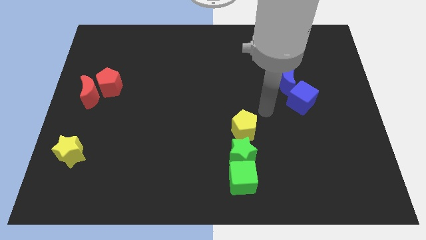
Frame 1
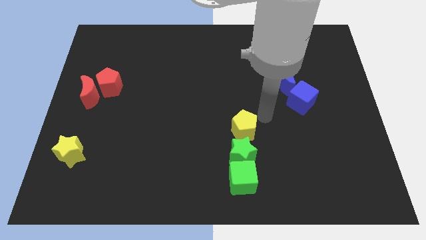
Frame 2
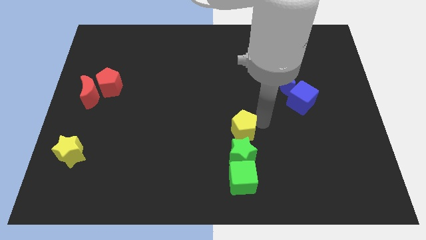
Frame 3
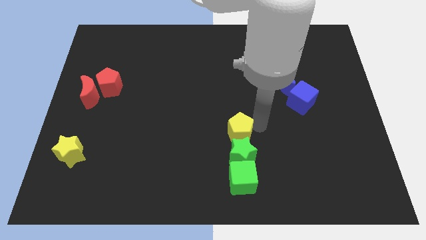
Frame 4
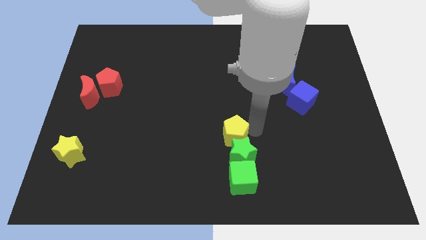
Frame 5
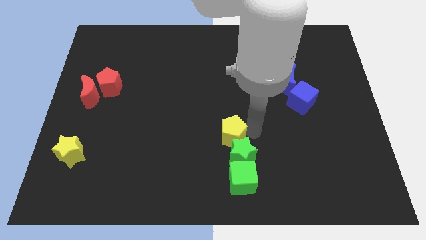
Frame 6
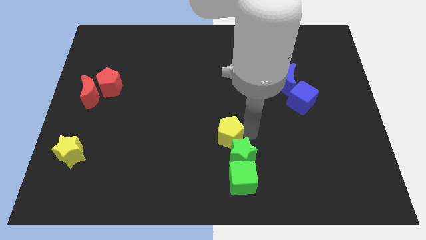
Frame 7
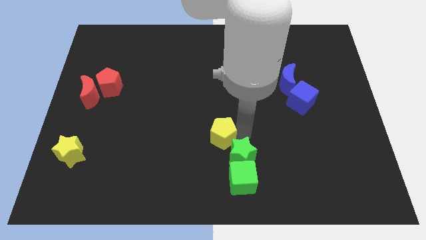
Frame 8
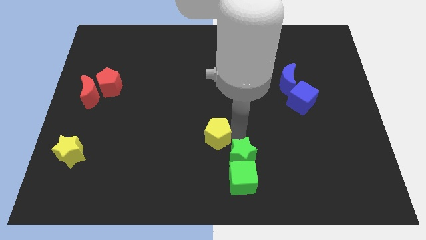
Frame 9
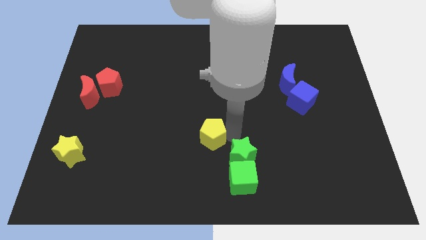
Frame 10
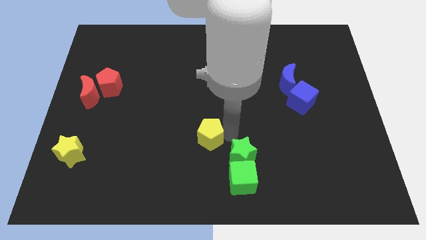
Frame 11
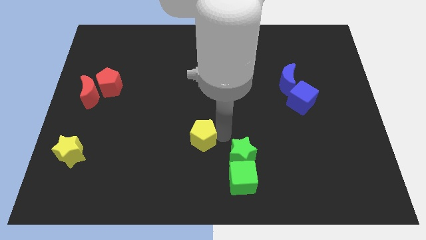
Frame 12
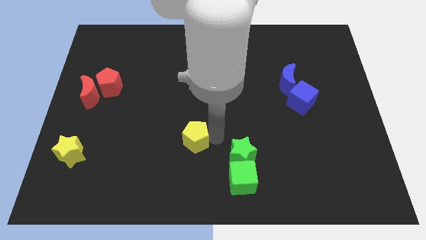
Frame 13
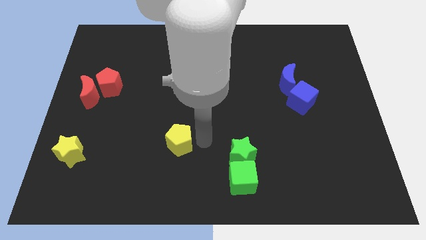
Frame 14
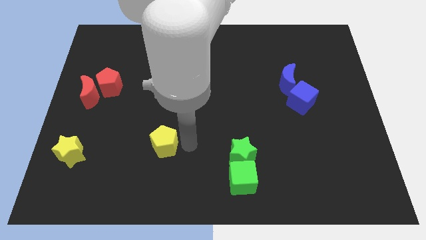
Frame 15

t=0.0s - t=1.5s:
separate the yellow pentagon from the vertical line of blocks

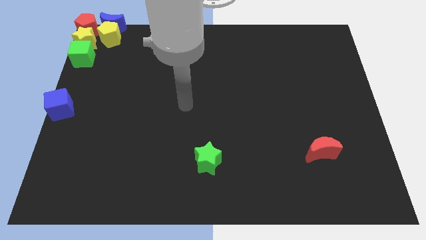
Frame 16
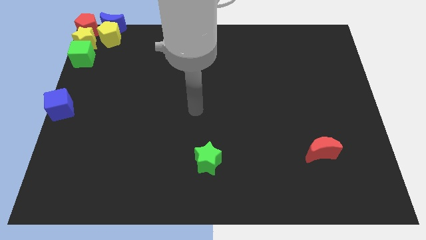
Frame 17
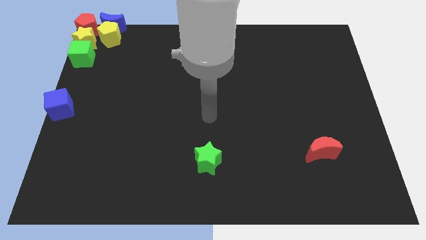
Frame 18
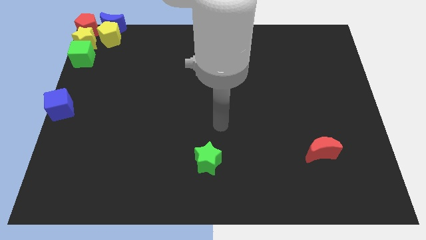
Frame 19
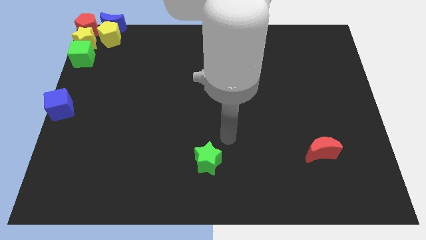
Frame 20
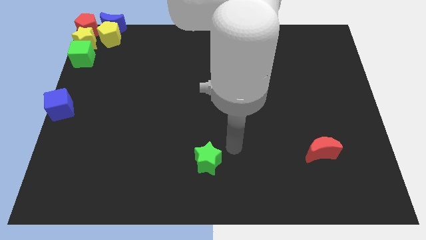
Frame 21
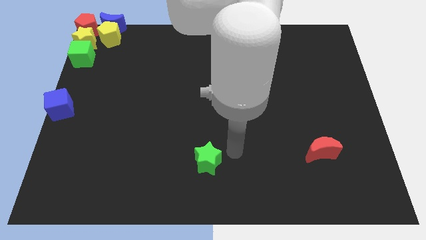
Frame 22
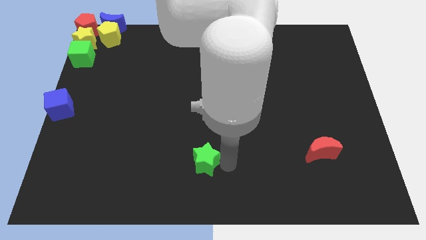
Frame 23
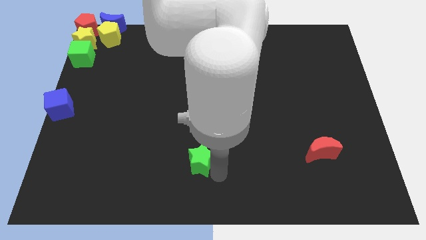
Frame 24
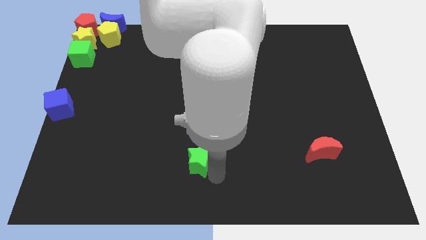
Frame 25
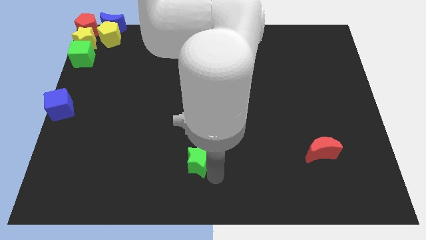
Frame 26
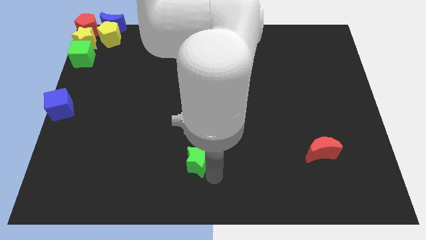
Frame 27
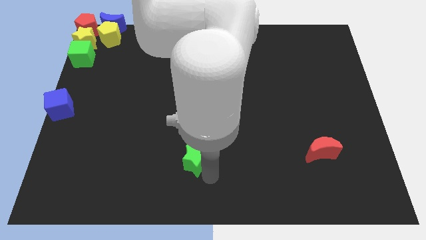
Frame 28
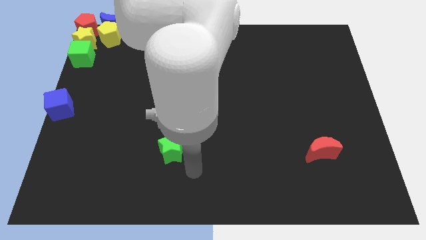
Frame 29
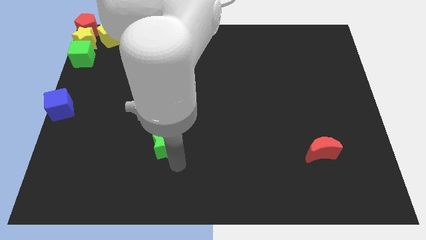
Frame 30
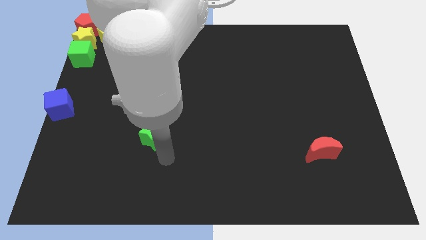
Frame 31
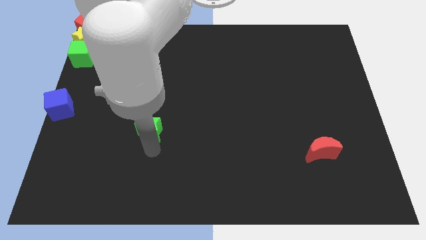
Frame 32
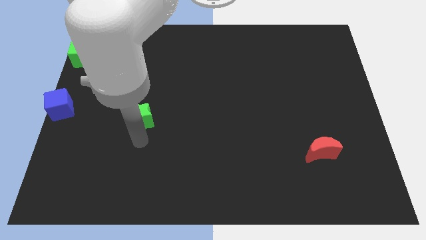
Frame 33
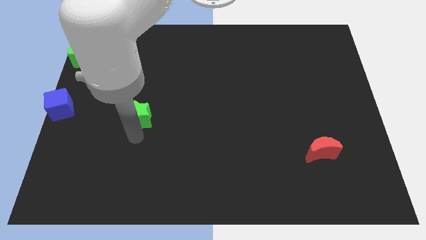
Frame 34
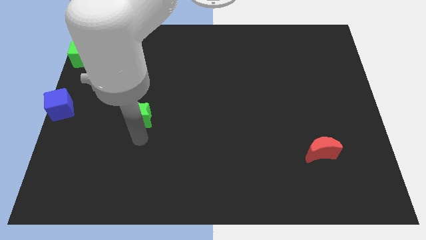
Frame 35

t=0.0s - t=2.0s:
push the green star towards top

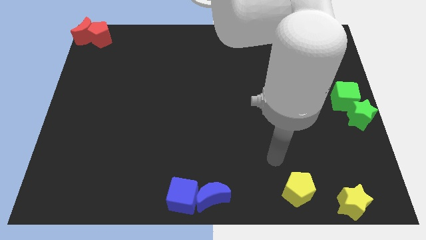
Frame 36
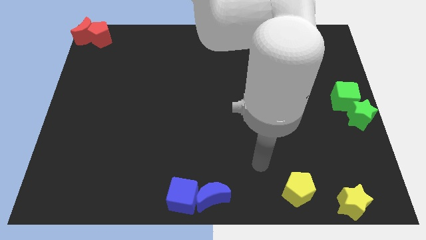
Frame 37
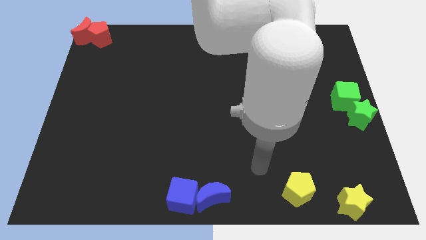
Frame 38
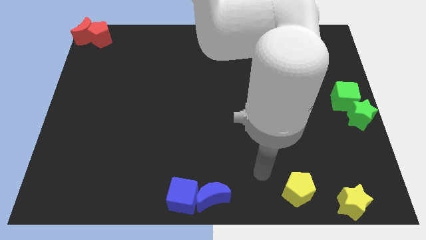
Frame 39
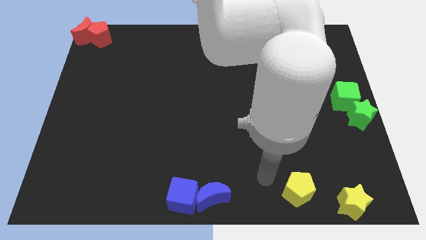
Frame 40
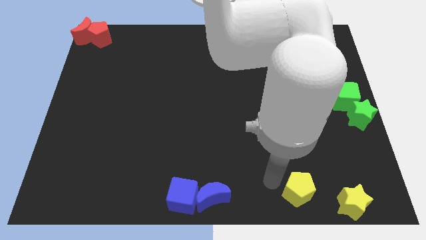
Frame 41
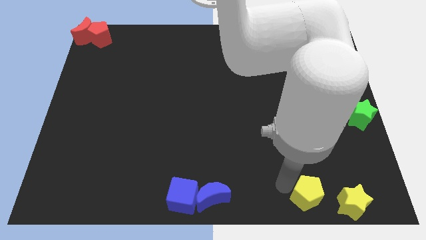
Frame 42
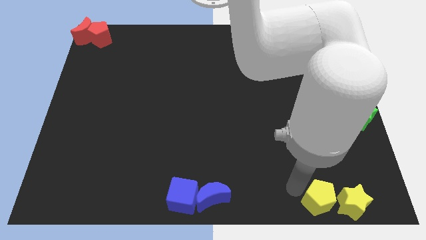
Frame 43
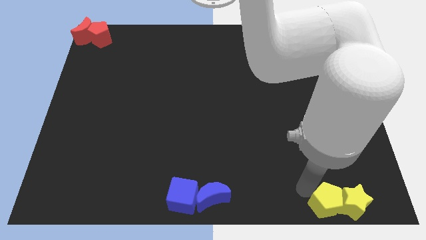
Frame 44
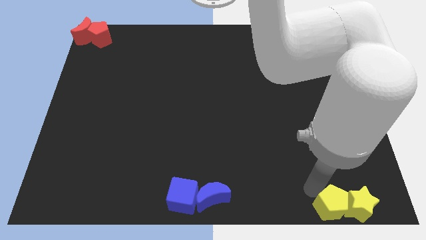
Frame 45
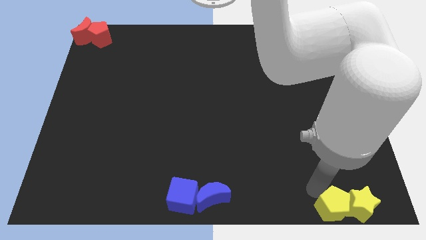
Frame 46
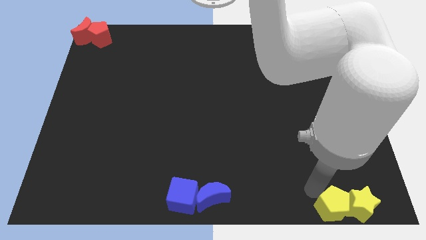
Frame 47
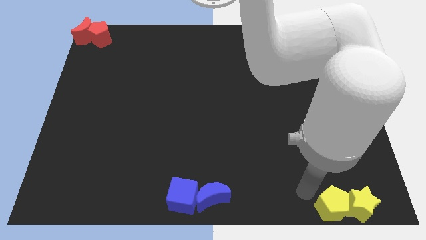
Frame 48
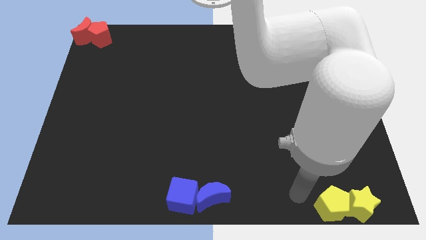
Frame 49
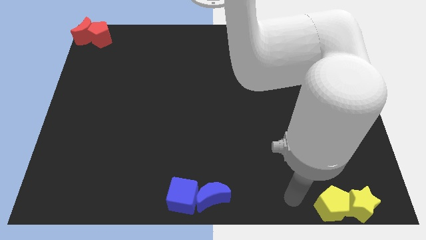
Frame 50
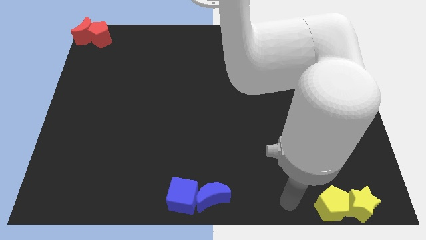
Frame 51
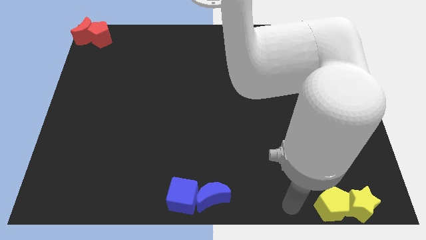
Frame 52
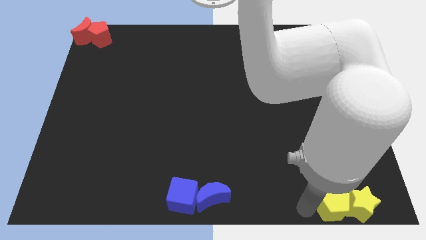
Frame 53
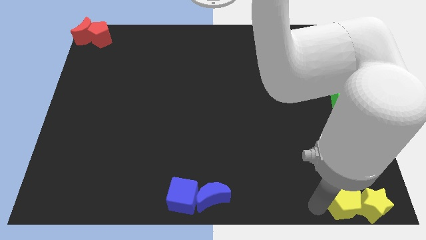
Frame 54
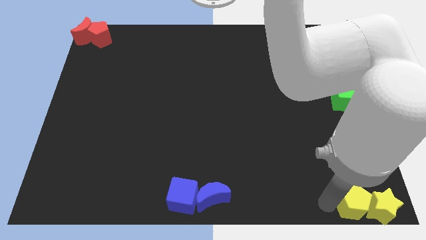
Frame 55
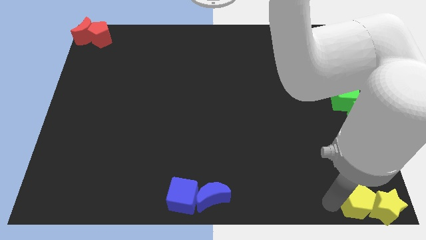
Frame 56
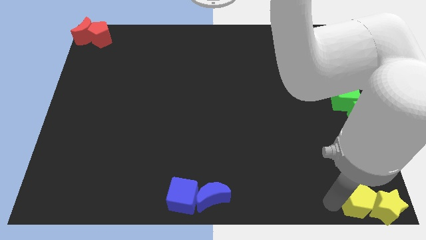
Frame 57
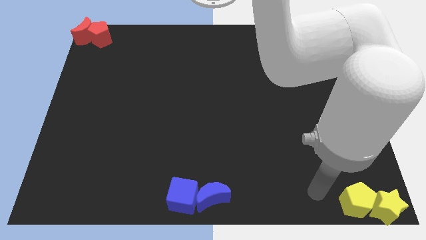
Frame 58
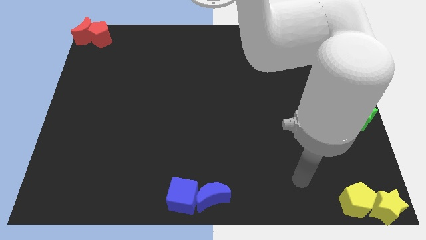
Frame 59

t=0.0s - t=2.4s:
move yellow star along with yellow pentagon to the bottom right of the board

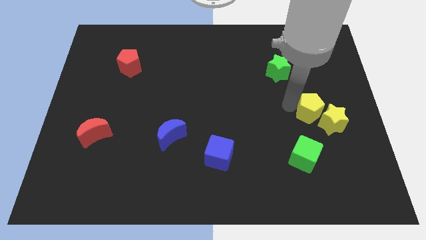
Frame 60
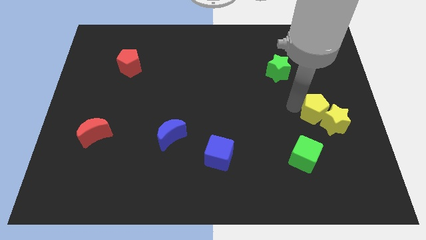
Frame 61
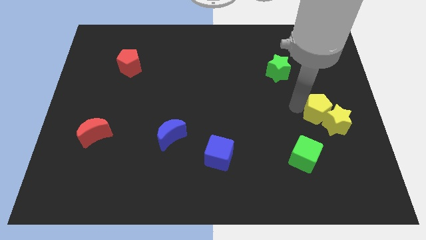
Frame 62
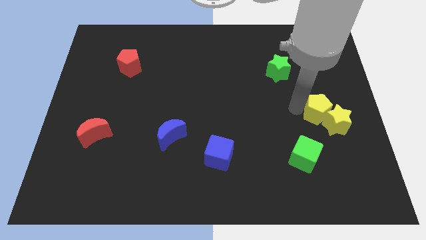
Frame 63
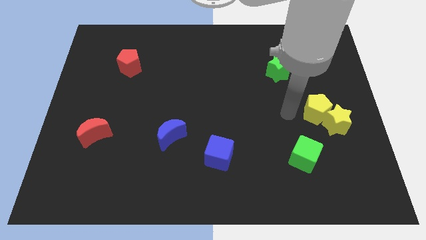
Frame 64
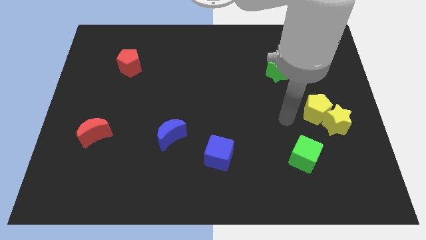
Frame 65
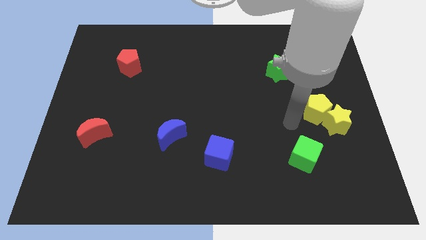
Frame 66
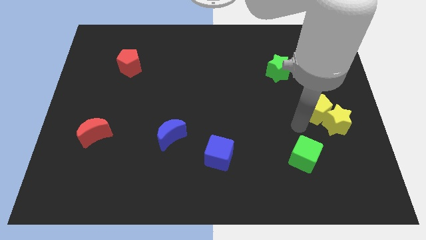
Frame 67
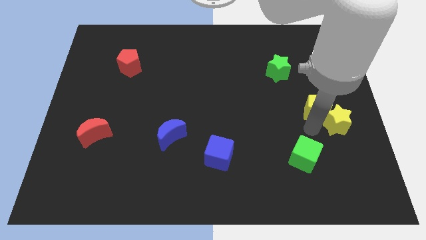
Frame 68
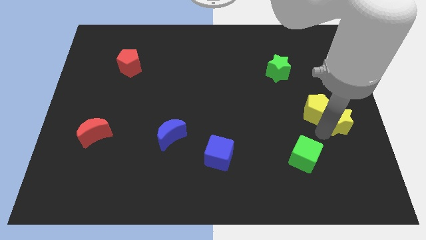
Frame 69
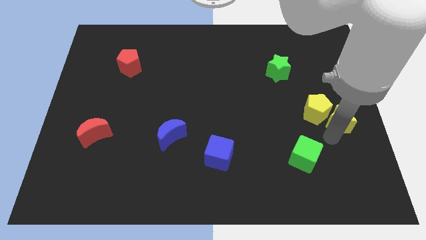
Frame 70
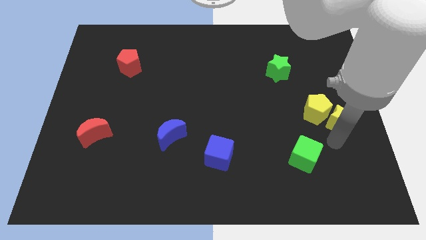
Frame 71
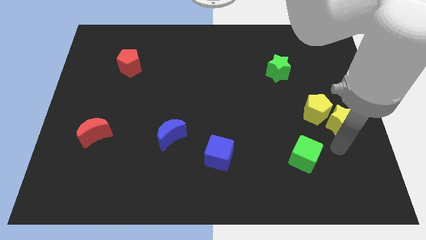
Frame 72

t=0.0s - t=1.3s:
slightly touch the yellow star

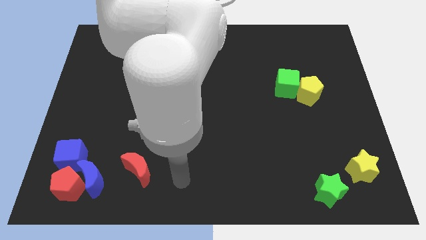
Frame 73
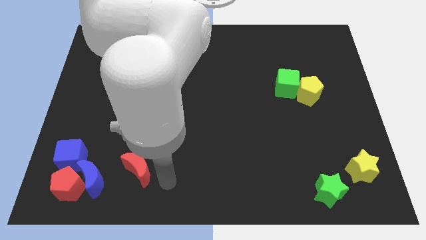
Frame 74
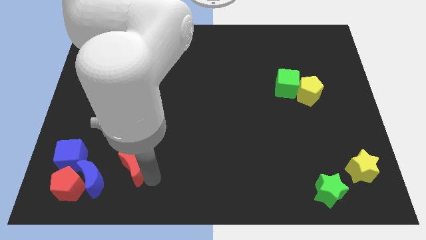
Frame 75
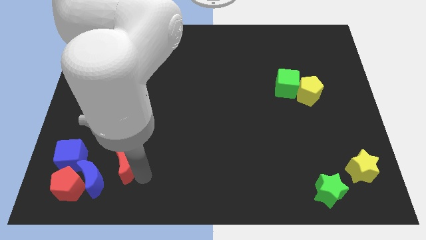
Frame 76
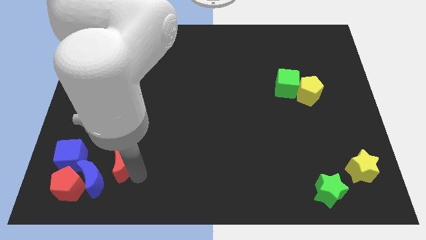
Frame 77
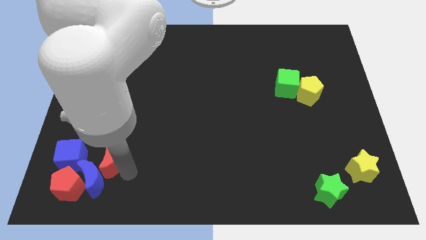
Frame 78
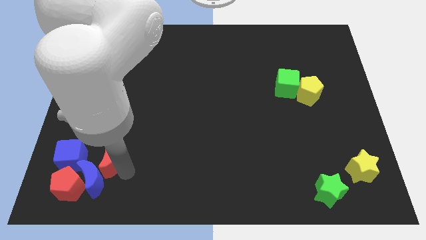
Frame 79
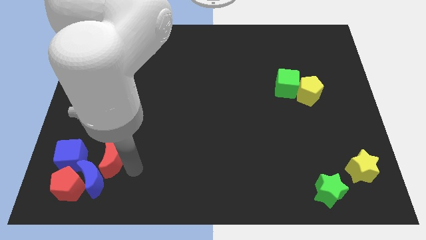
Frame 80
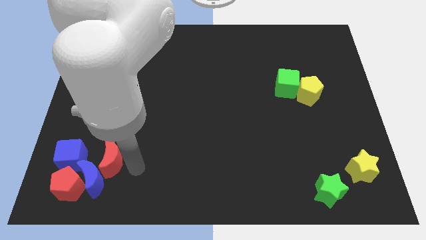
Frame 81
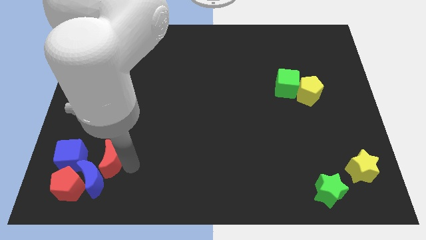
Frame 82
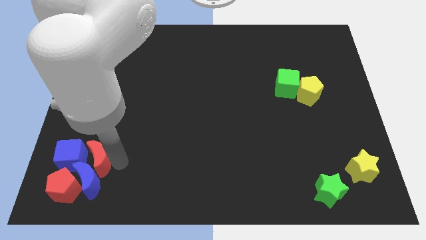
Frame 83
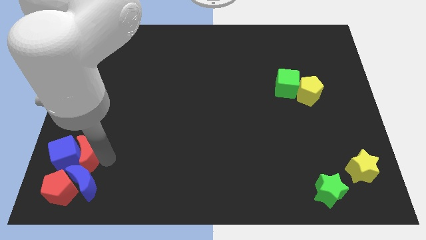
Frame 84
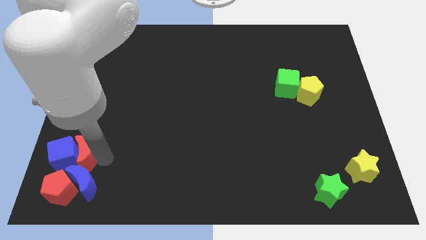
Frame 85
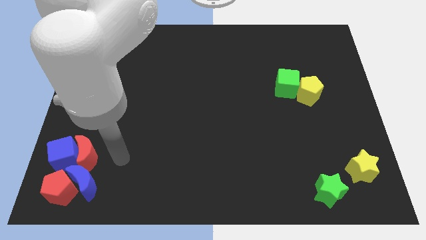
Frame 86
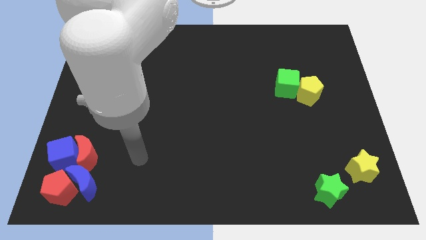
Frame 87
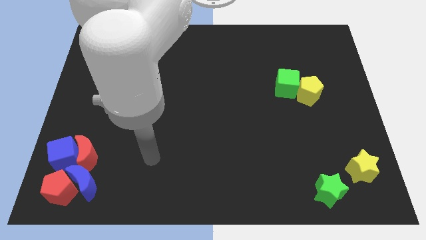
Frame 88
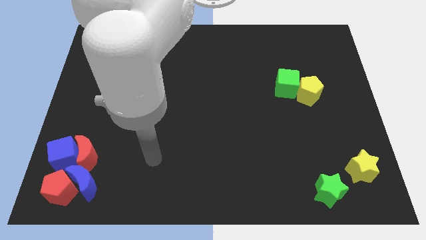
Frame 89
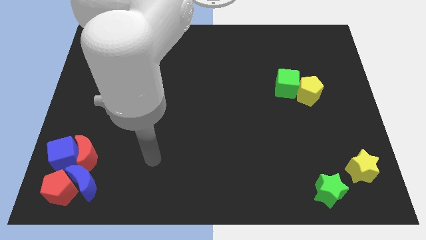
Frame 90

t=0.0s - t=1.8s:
push the red crescent into blue cube at the bottom
